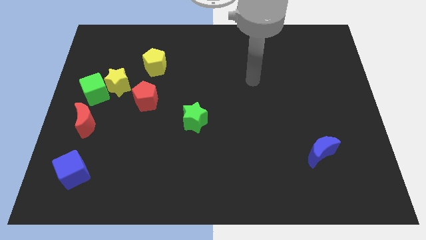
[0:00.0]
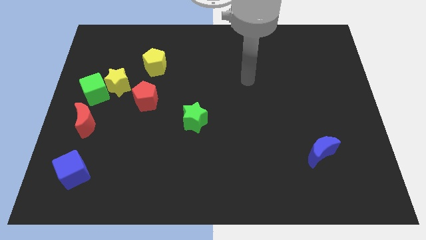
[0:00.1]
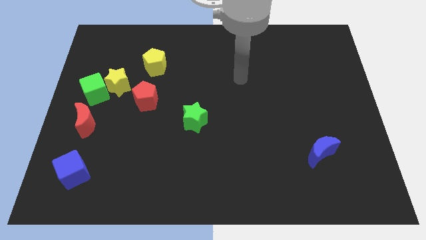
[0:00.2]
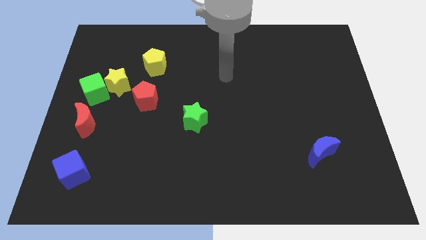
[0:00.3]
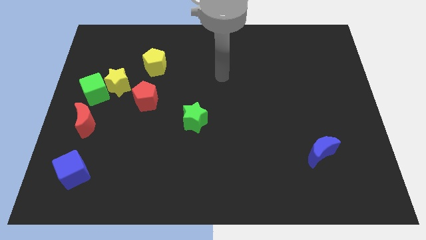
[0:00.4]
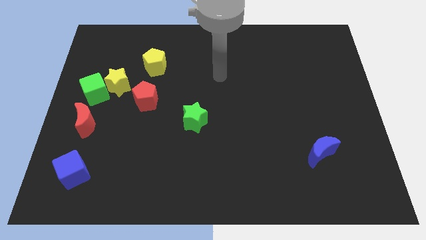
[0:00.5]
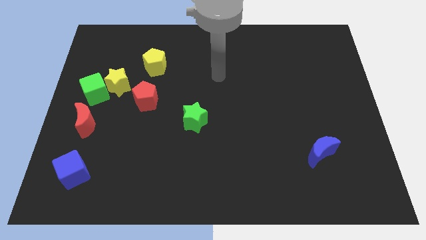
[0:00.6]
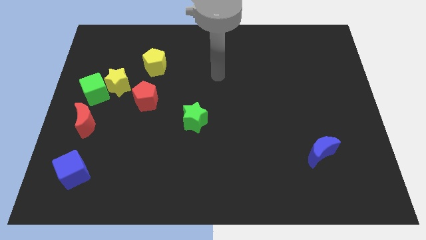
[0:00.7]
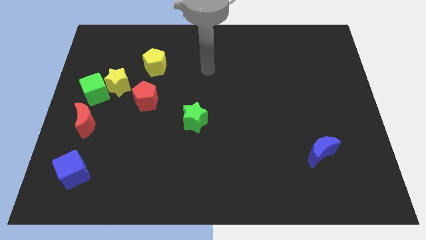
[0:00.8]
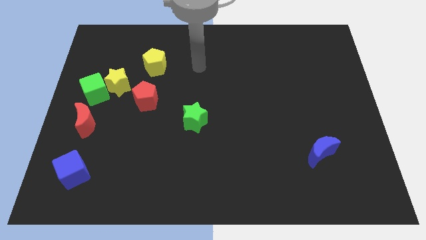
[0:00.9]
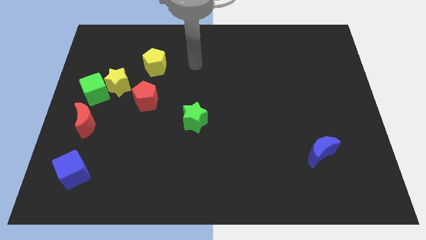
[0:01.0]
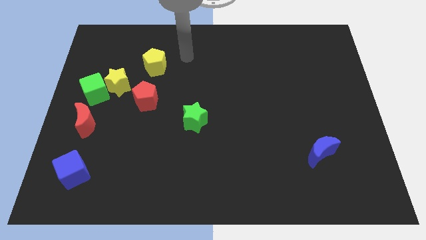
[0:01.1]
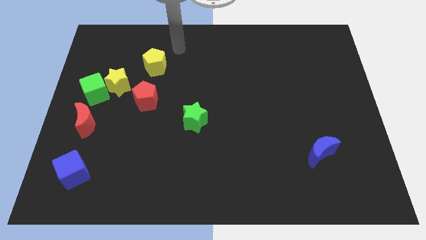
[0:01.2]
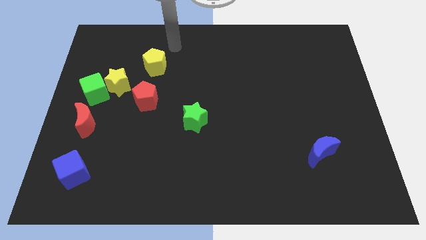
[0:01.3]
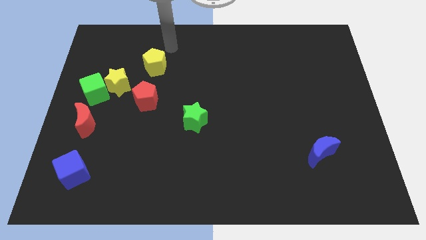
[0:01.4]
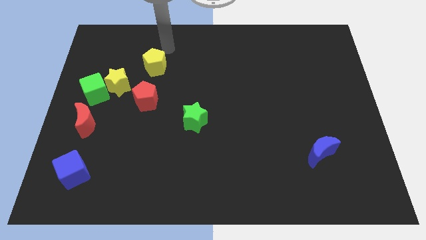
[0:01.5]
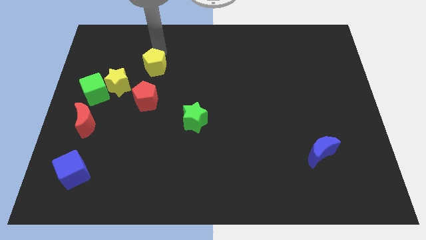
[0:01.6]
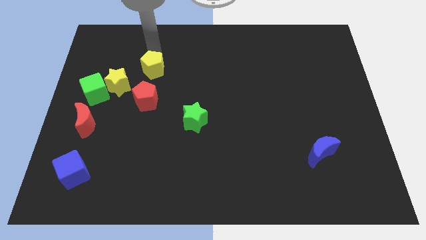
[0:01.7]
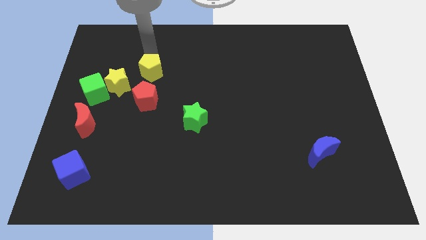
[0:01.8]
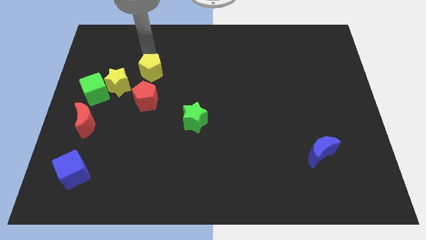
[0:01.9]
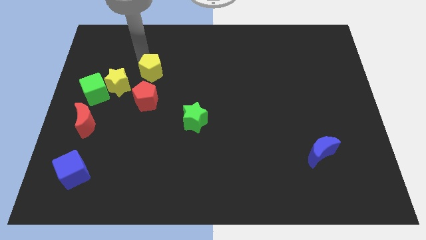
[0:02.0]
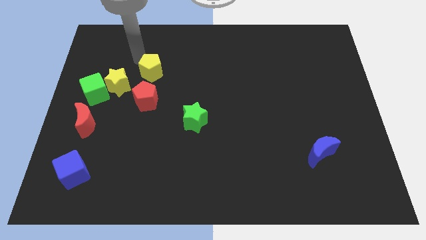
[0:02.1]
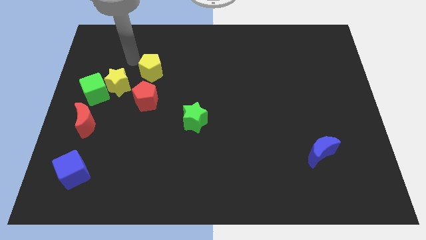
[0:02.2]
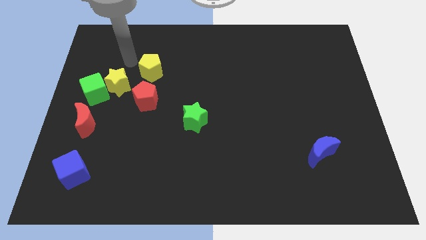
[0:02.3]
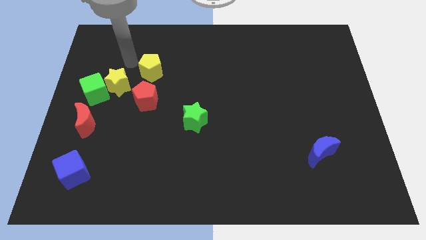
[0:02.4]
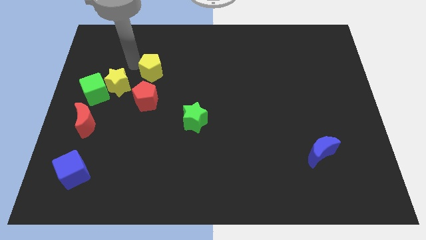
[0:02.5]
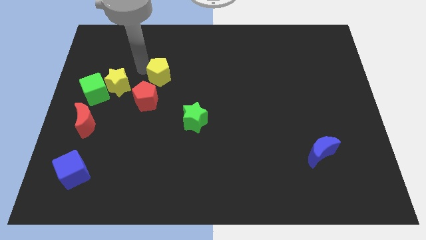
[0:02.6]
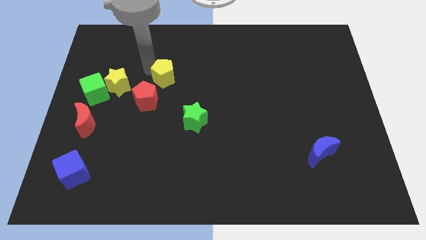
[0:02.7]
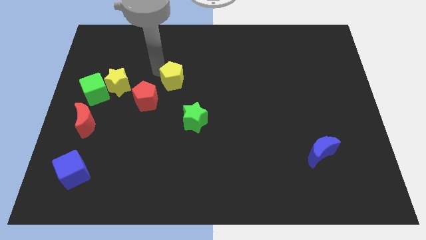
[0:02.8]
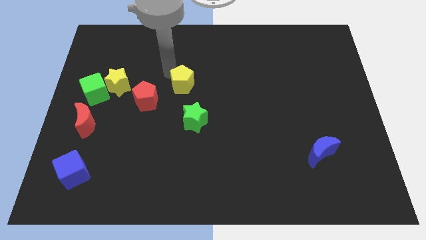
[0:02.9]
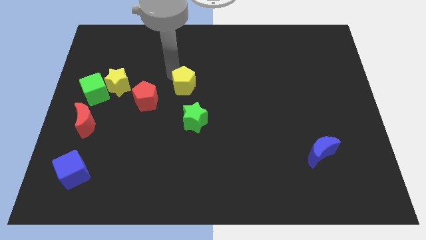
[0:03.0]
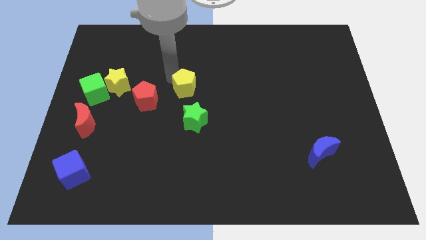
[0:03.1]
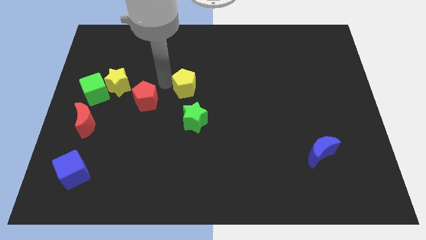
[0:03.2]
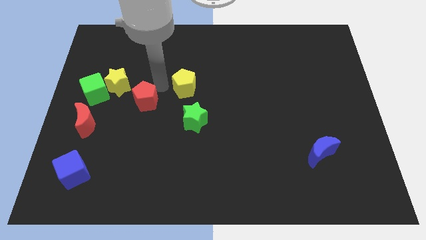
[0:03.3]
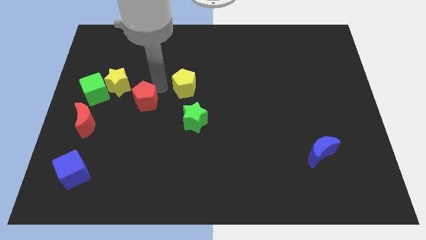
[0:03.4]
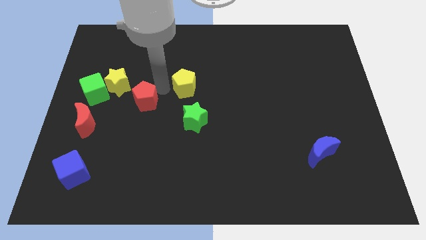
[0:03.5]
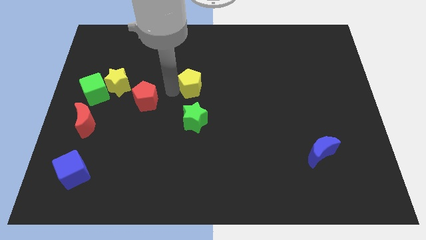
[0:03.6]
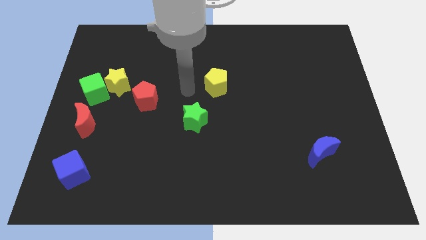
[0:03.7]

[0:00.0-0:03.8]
place yellow pentagon to the top of green star

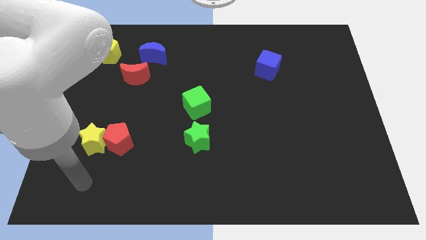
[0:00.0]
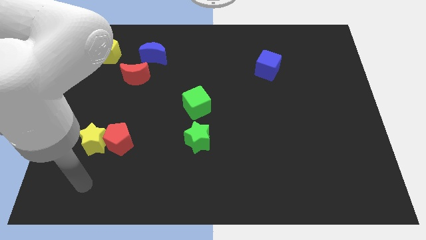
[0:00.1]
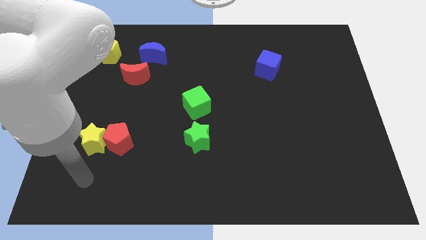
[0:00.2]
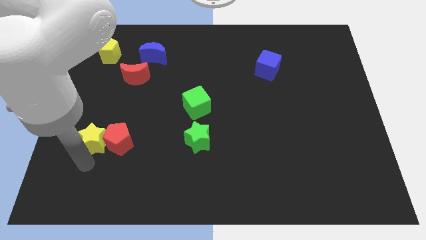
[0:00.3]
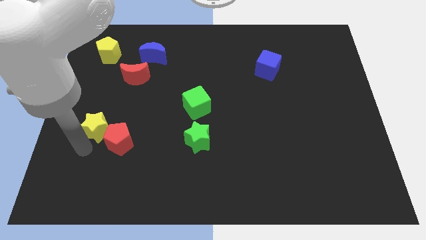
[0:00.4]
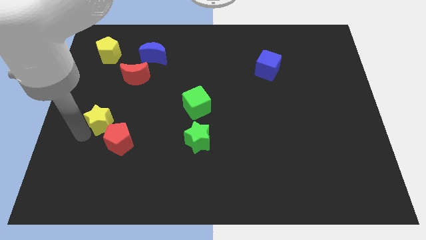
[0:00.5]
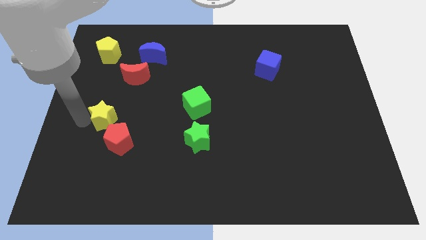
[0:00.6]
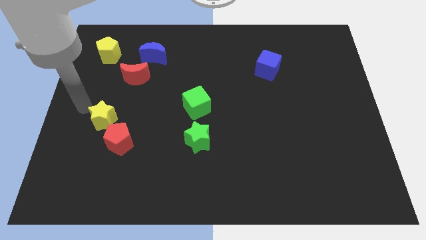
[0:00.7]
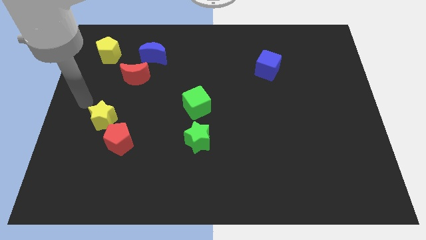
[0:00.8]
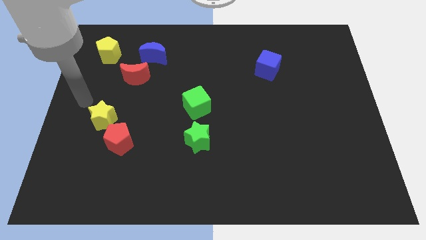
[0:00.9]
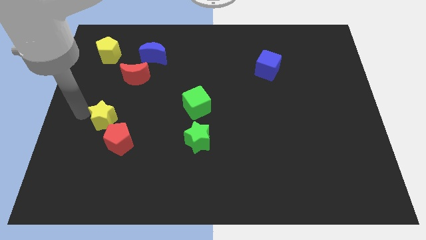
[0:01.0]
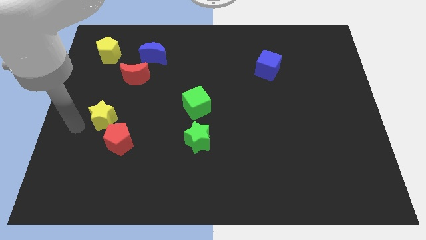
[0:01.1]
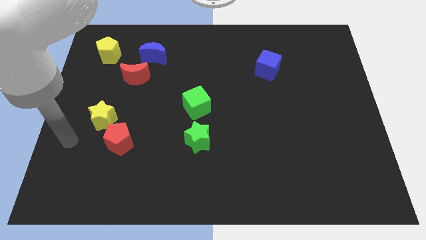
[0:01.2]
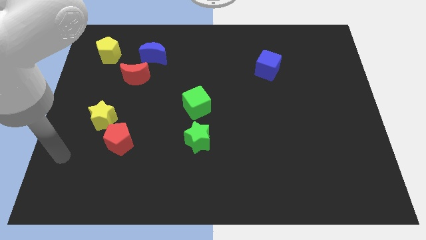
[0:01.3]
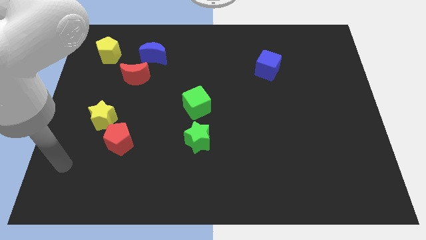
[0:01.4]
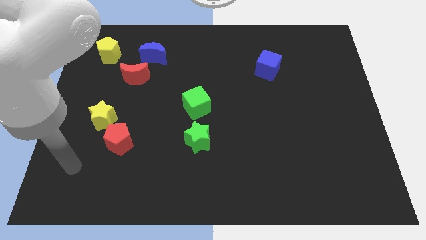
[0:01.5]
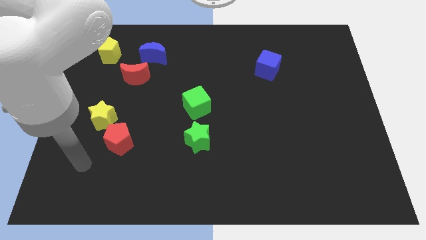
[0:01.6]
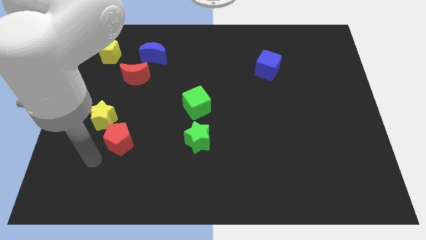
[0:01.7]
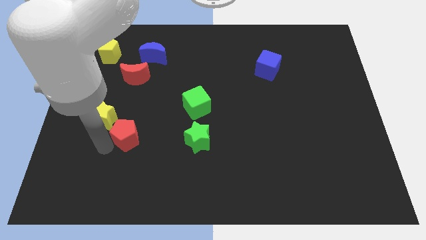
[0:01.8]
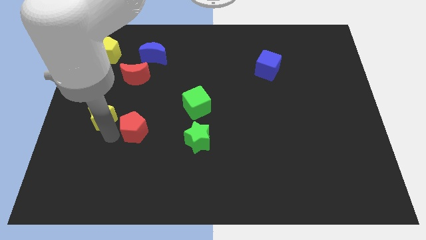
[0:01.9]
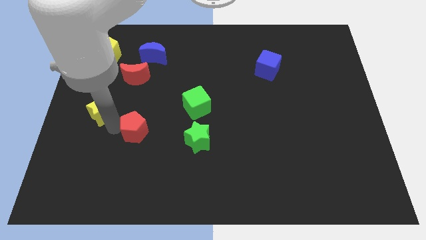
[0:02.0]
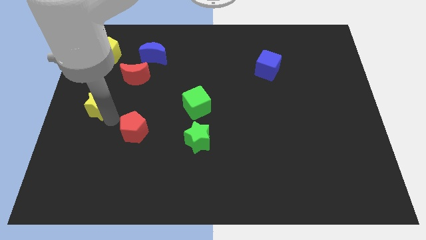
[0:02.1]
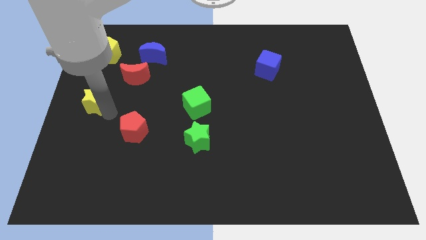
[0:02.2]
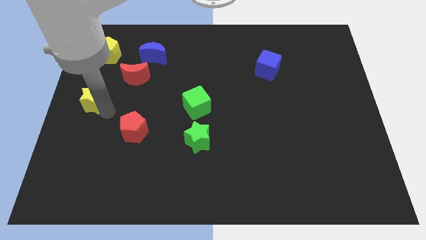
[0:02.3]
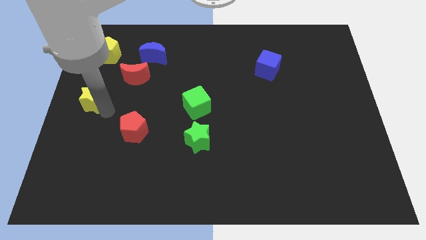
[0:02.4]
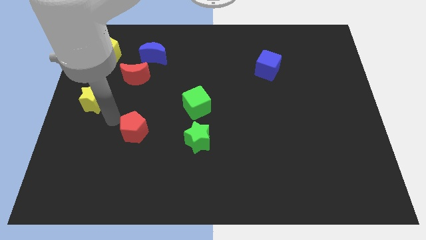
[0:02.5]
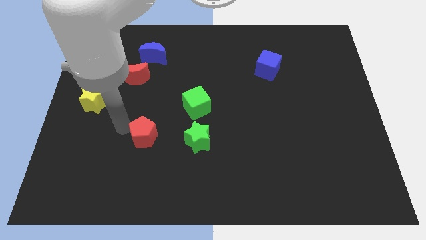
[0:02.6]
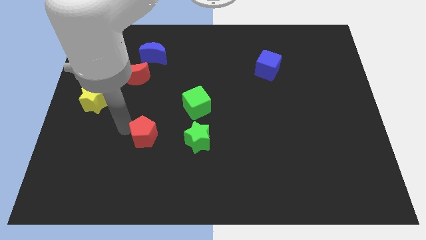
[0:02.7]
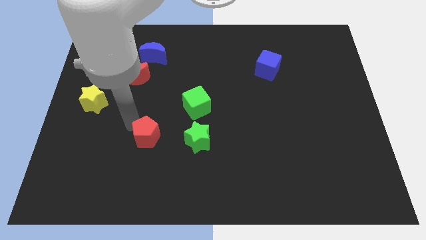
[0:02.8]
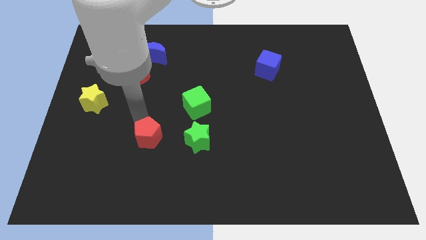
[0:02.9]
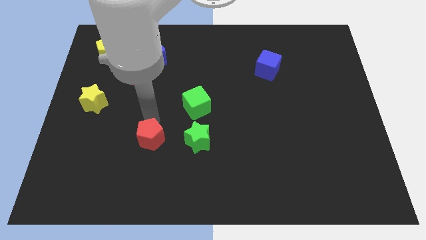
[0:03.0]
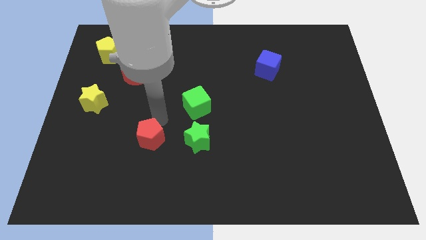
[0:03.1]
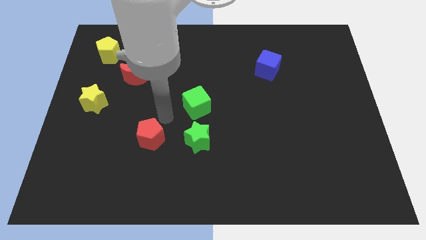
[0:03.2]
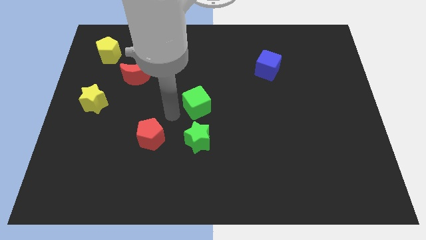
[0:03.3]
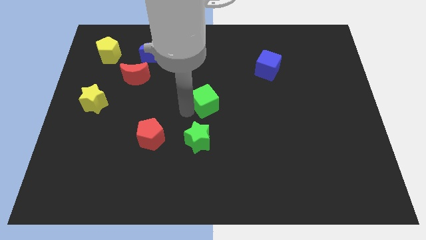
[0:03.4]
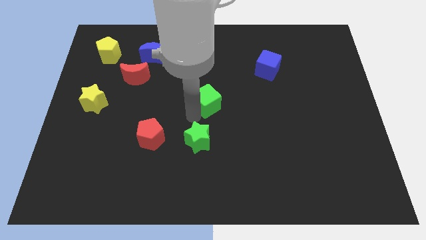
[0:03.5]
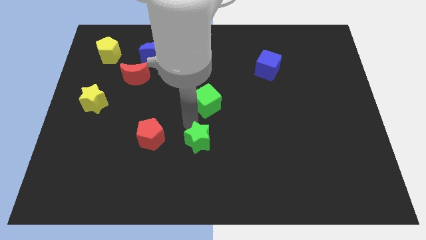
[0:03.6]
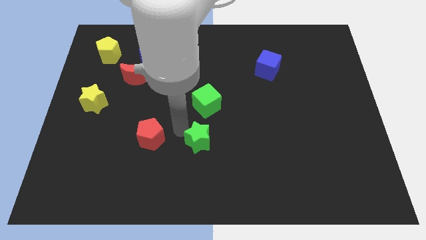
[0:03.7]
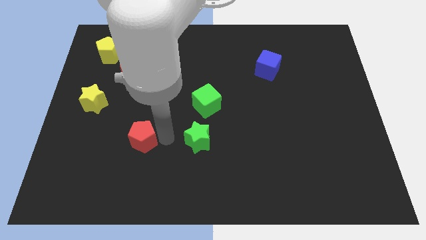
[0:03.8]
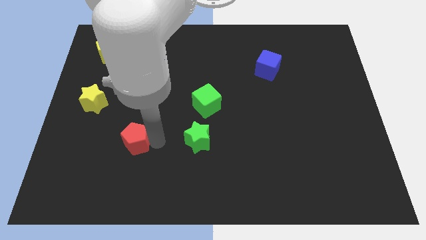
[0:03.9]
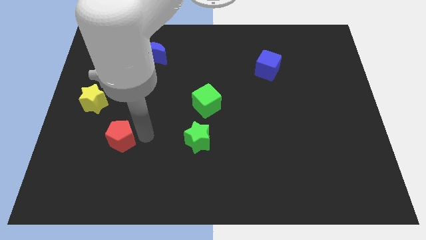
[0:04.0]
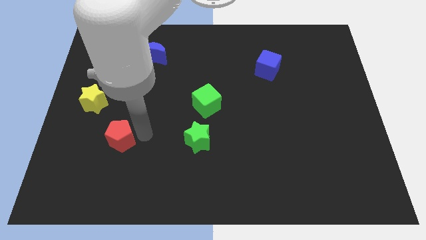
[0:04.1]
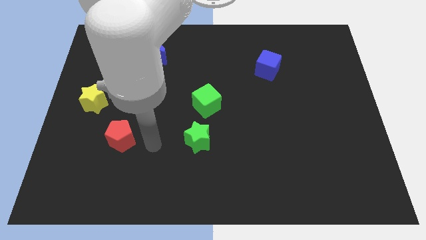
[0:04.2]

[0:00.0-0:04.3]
move the red pentagon to the left of the green star

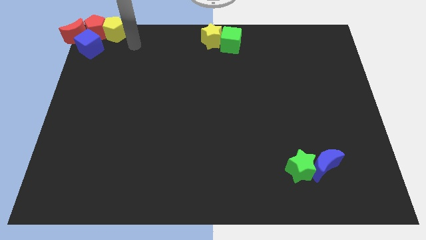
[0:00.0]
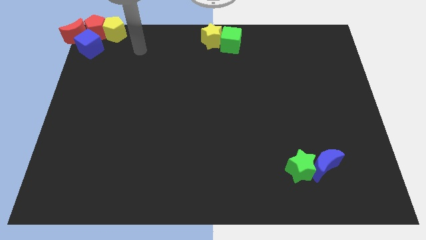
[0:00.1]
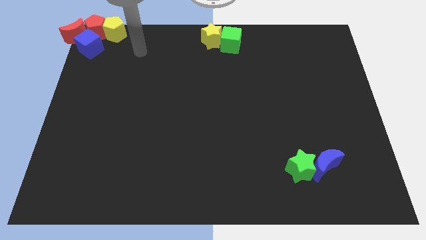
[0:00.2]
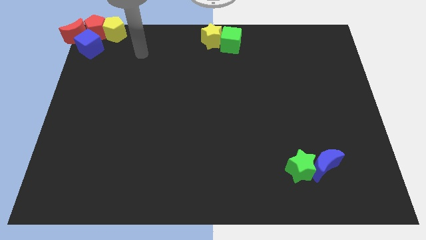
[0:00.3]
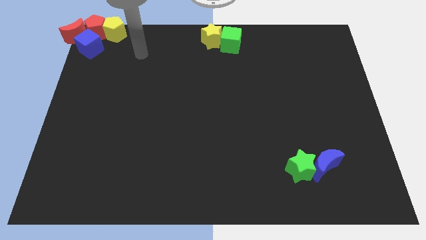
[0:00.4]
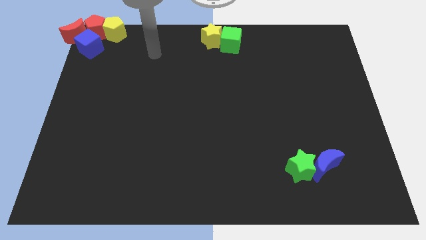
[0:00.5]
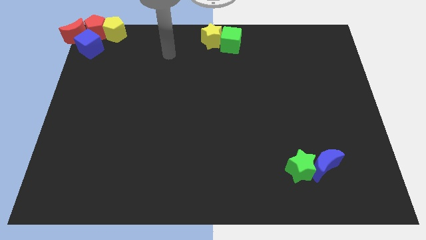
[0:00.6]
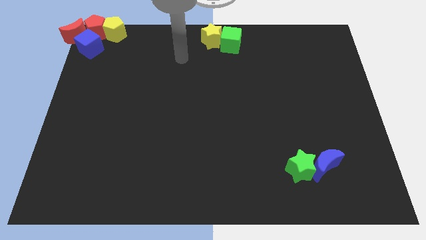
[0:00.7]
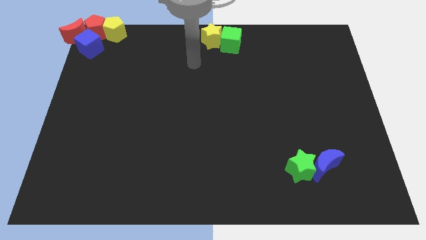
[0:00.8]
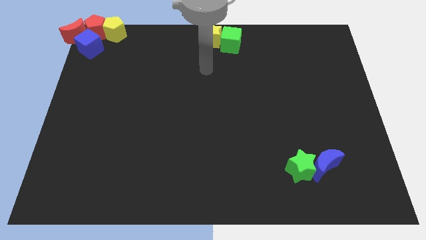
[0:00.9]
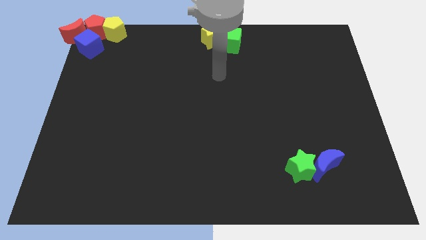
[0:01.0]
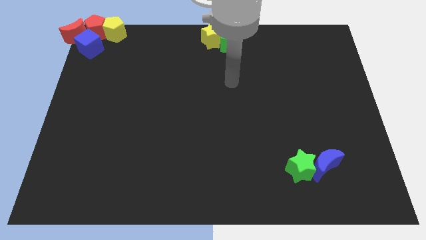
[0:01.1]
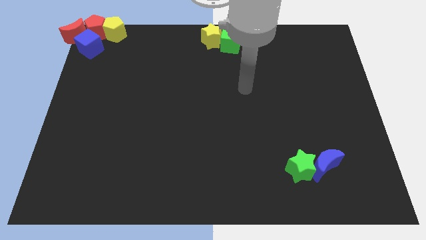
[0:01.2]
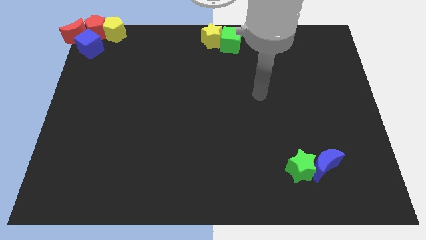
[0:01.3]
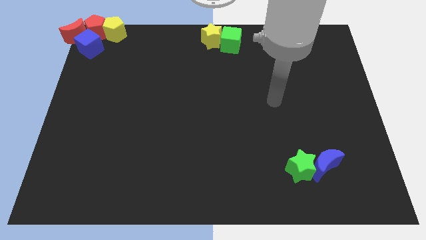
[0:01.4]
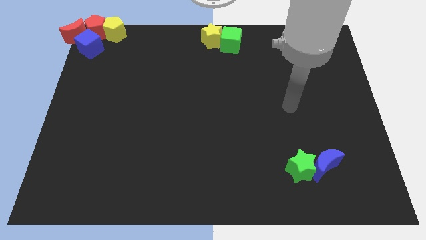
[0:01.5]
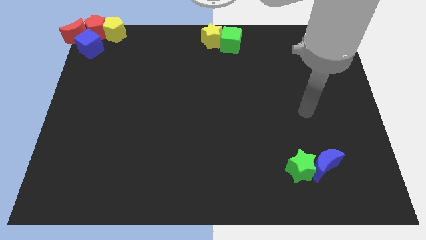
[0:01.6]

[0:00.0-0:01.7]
move your hand vertically above the green star
